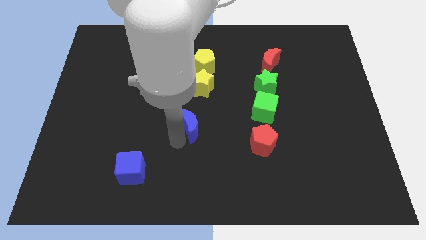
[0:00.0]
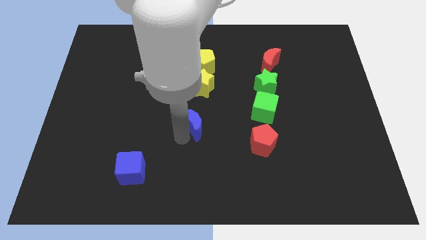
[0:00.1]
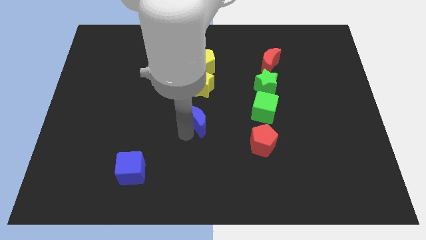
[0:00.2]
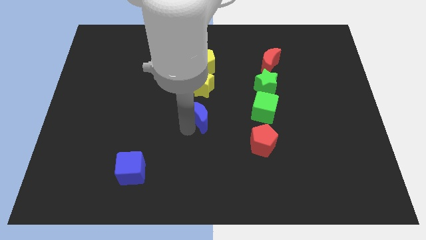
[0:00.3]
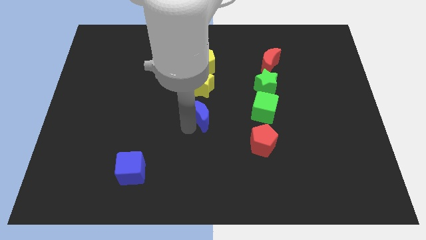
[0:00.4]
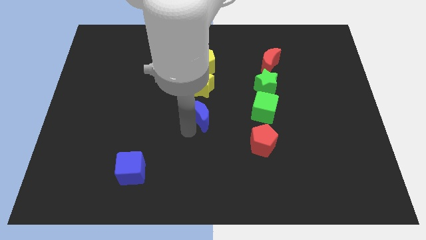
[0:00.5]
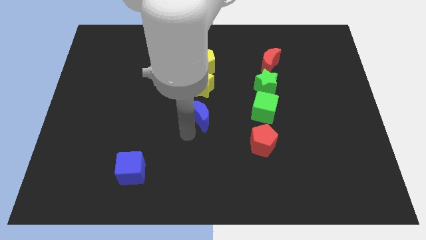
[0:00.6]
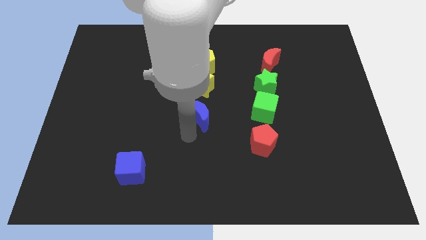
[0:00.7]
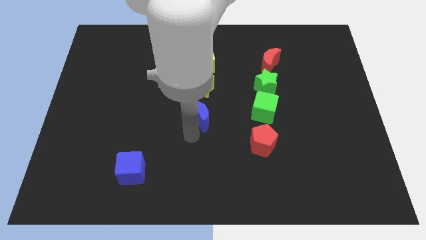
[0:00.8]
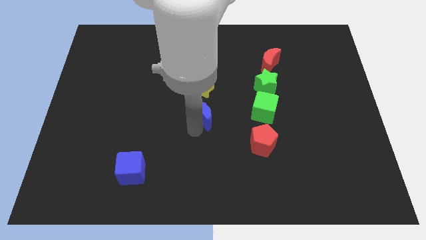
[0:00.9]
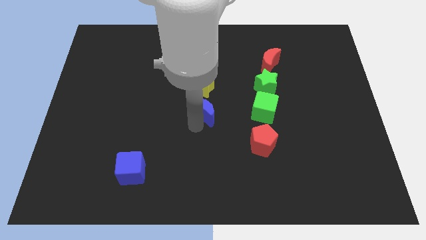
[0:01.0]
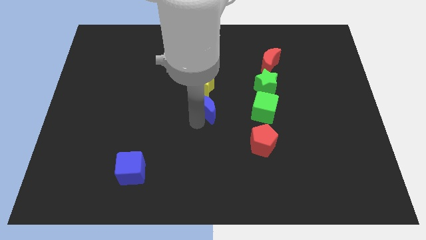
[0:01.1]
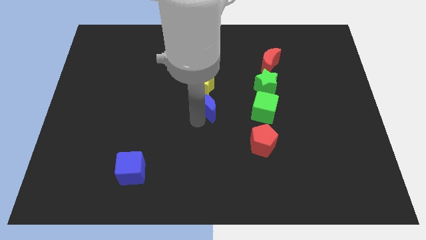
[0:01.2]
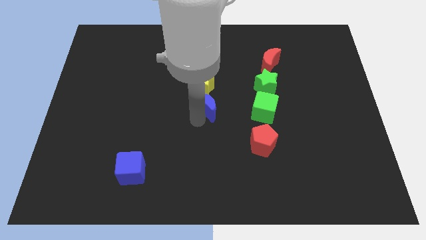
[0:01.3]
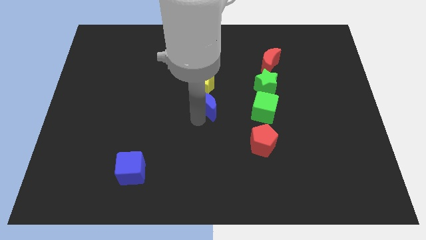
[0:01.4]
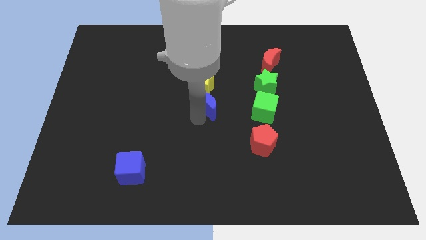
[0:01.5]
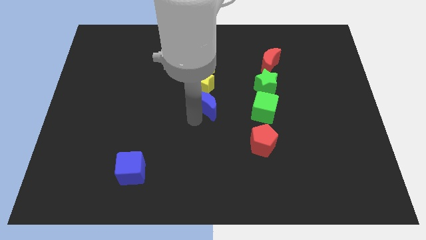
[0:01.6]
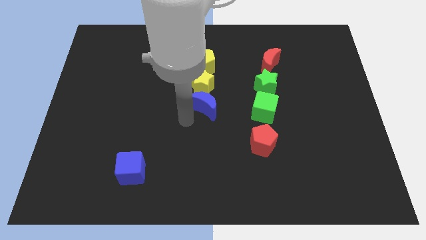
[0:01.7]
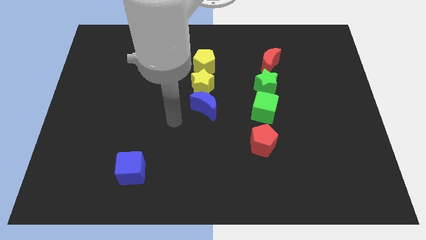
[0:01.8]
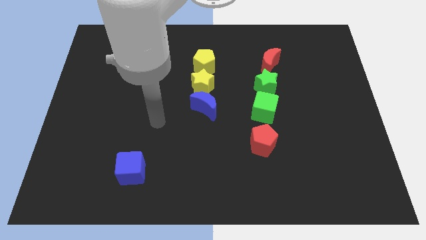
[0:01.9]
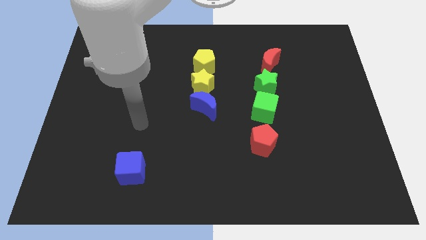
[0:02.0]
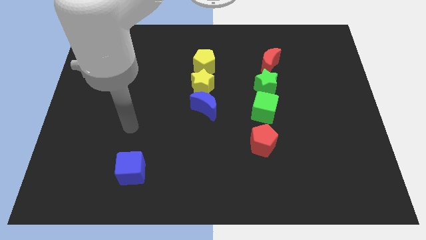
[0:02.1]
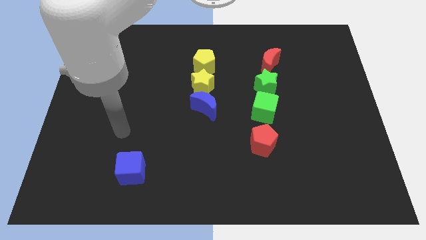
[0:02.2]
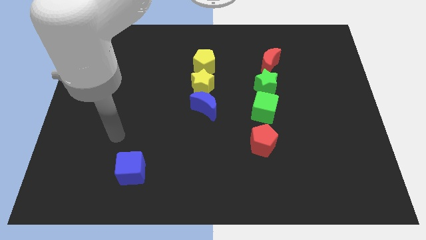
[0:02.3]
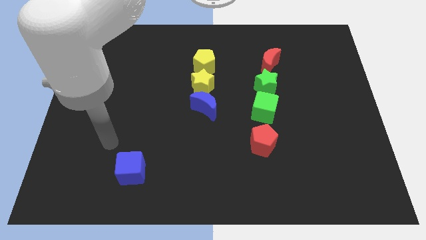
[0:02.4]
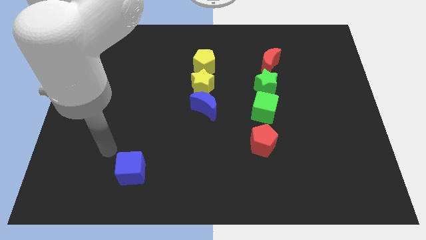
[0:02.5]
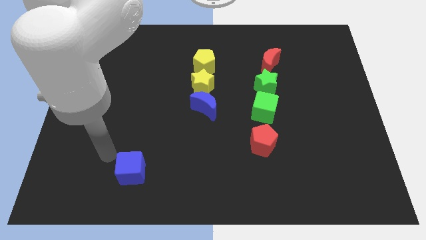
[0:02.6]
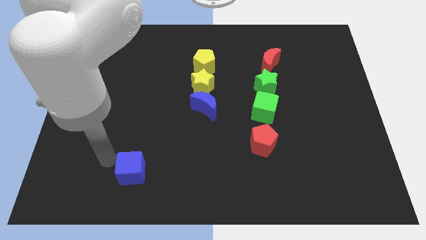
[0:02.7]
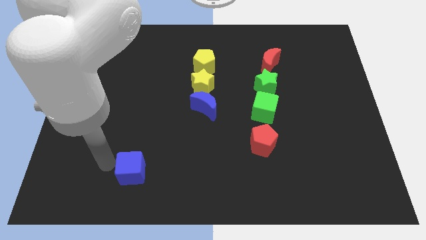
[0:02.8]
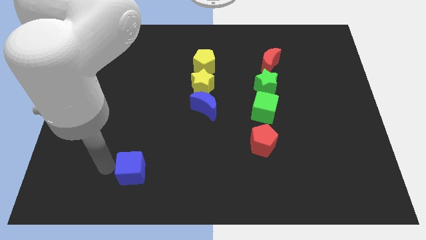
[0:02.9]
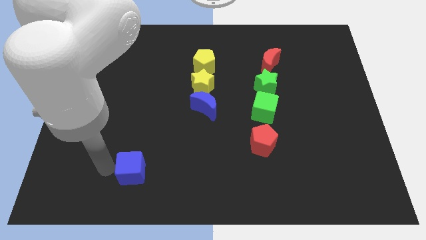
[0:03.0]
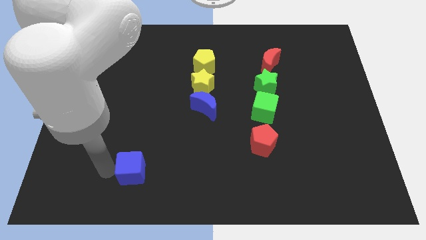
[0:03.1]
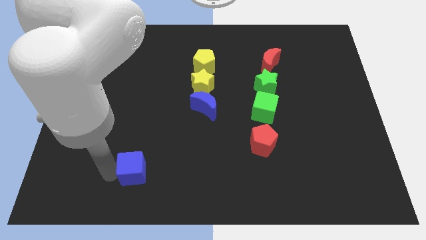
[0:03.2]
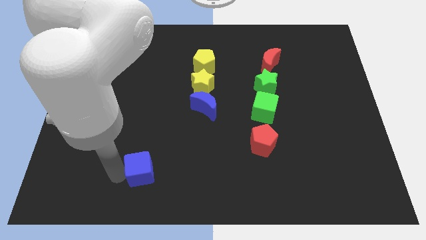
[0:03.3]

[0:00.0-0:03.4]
place the arm to the left of the blue cube

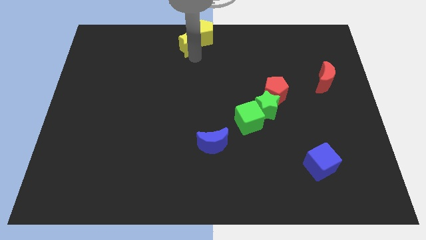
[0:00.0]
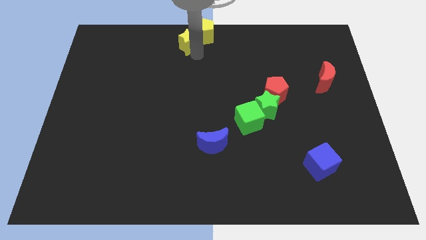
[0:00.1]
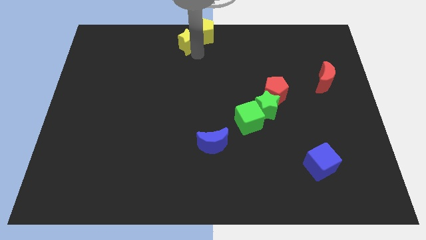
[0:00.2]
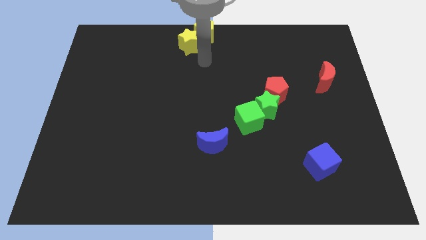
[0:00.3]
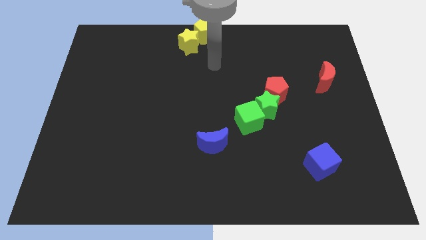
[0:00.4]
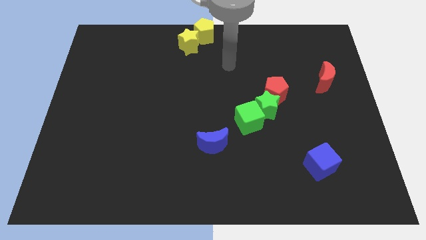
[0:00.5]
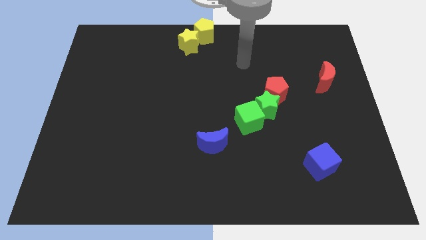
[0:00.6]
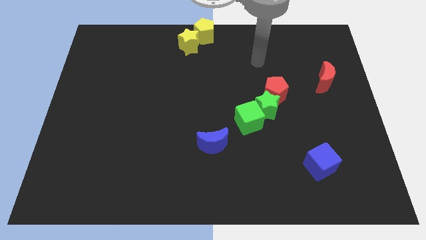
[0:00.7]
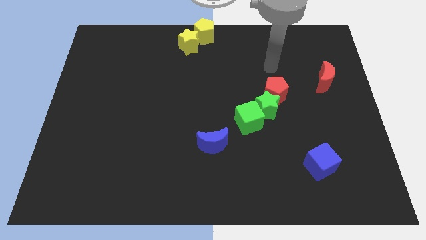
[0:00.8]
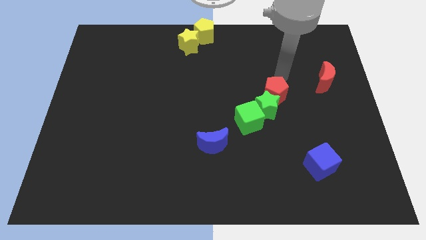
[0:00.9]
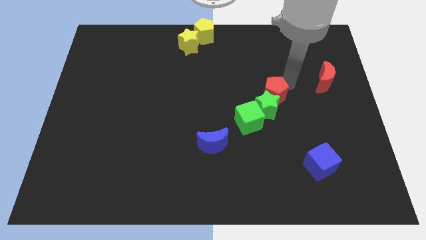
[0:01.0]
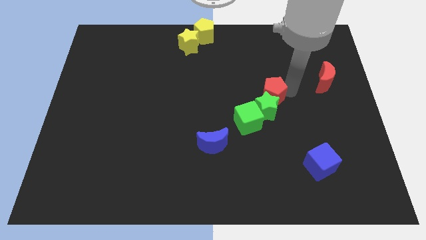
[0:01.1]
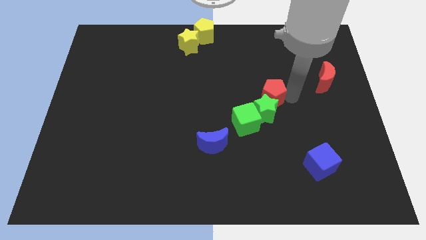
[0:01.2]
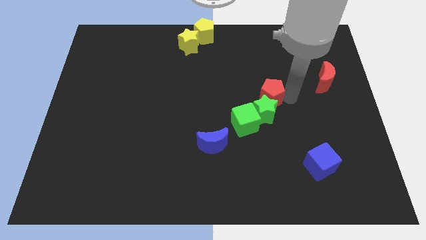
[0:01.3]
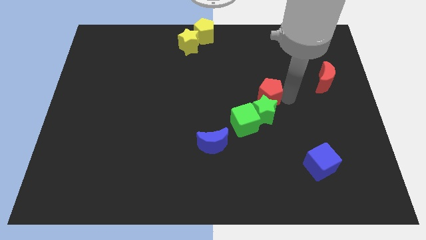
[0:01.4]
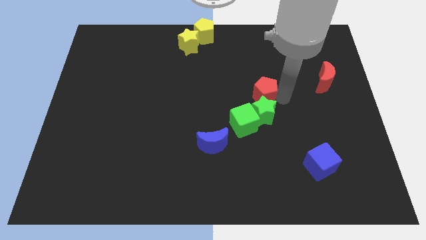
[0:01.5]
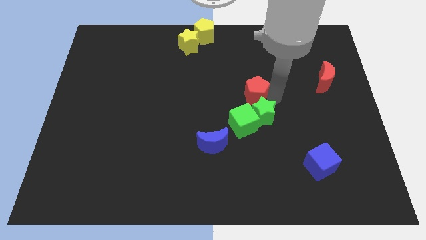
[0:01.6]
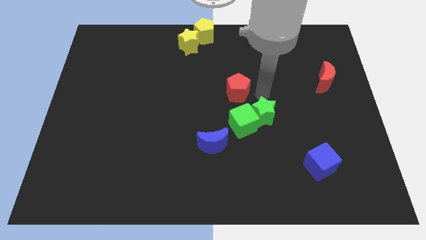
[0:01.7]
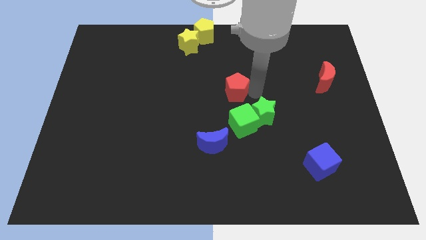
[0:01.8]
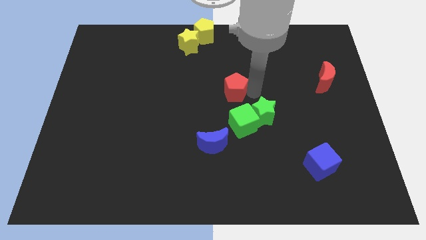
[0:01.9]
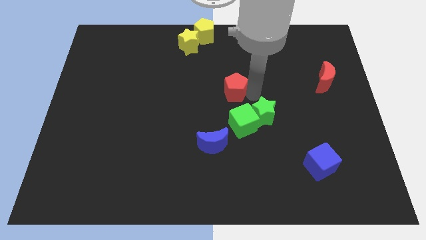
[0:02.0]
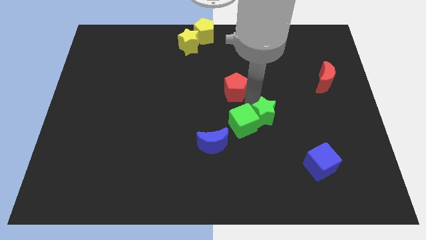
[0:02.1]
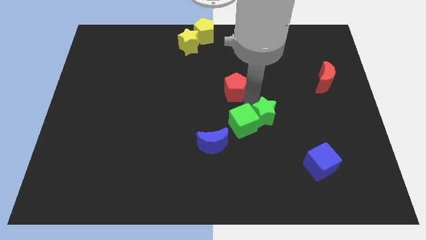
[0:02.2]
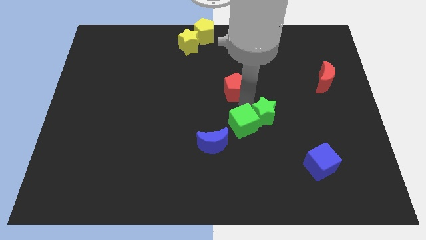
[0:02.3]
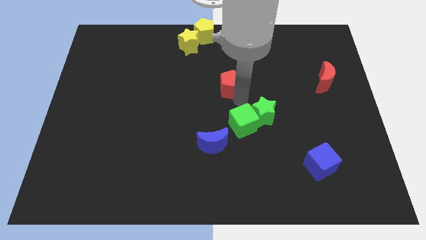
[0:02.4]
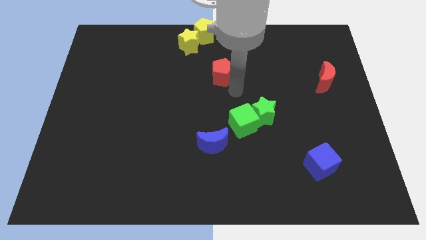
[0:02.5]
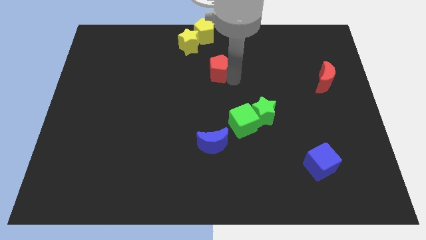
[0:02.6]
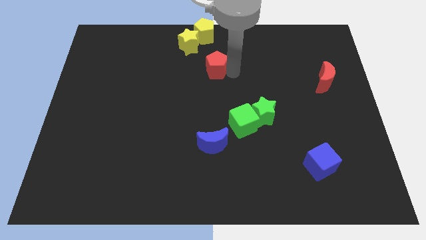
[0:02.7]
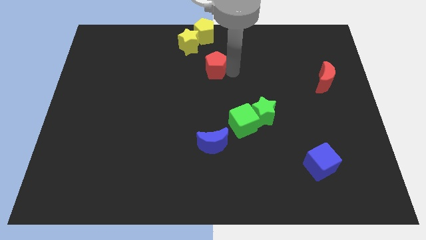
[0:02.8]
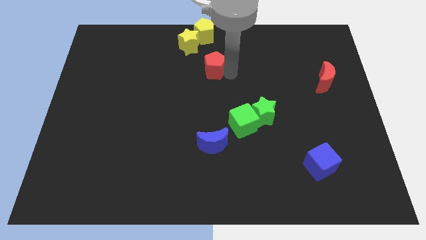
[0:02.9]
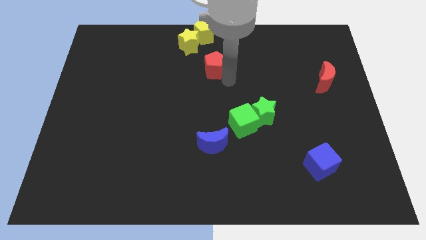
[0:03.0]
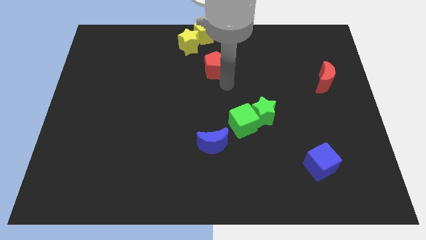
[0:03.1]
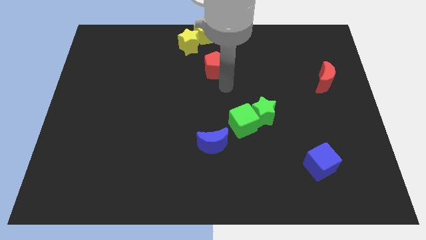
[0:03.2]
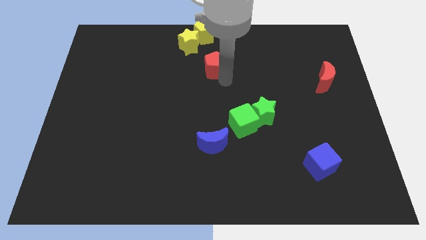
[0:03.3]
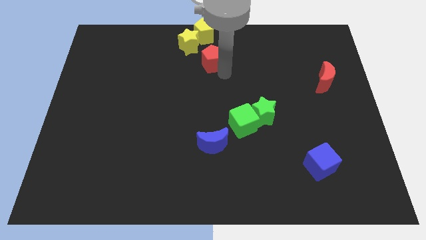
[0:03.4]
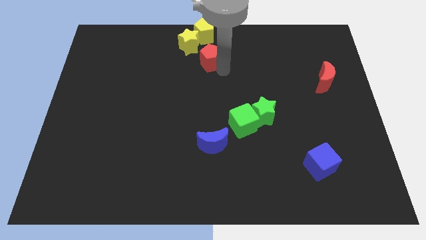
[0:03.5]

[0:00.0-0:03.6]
move red pentagon vertically below yellow pentagon

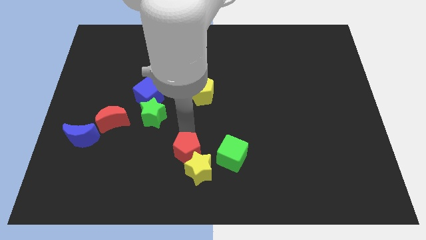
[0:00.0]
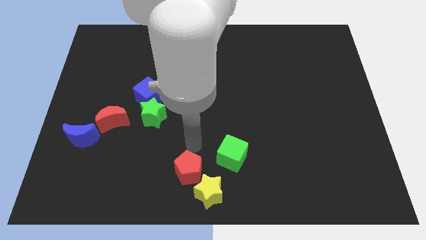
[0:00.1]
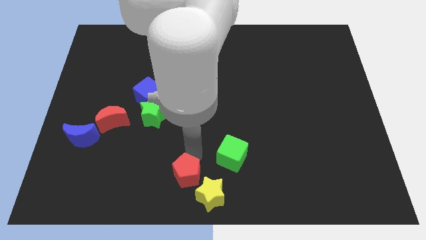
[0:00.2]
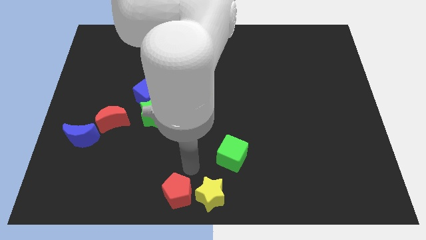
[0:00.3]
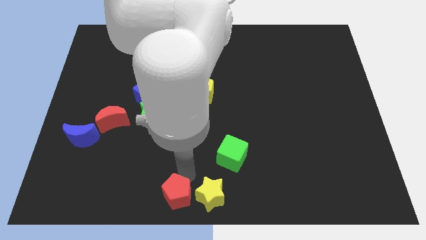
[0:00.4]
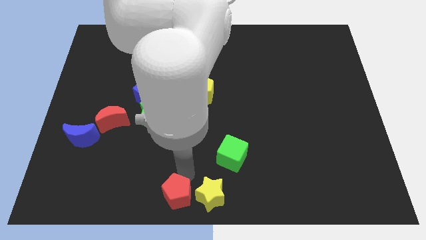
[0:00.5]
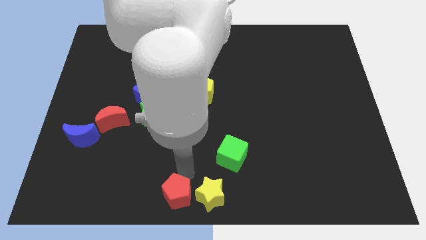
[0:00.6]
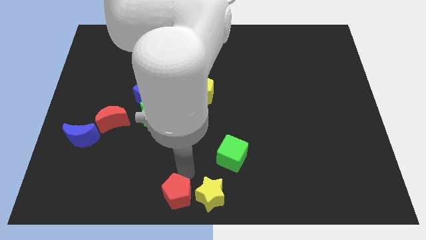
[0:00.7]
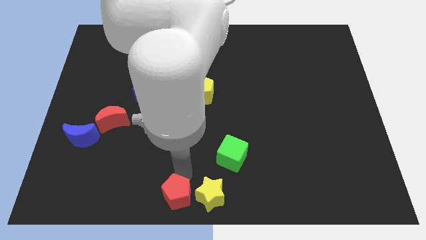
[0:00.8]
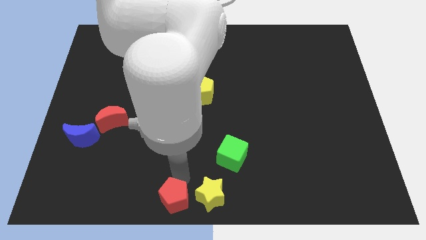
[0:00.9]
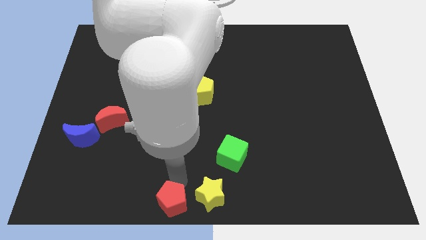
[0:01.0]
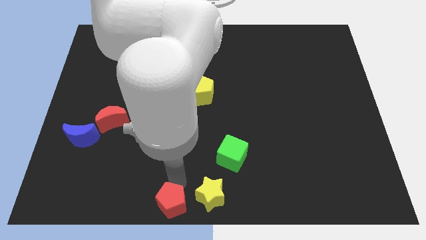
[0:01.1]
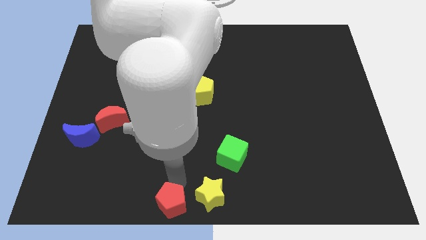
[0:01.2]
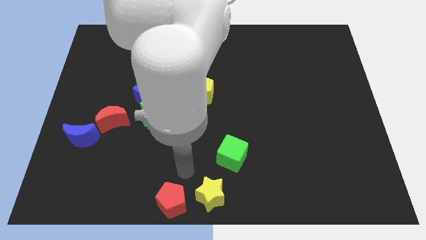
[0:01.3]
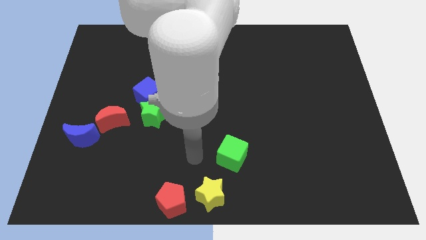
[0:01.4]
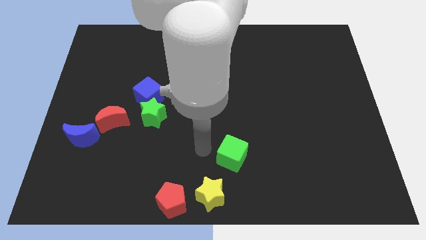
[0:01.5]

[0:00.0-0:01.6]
push the red pentagon with yellow star towards bottom center of the board

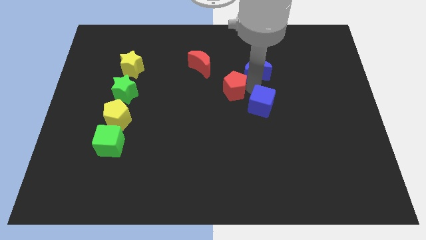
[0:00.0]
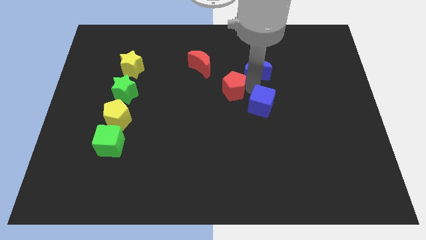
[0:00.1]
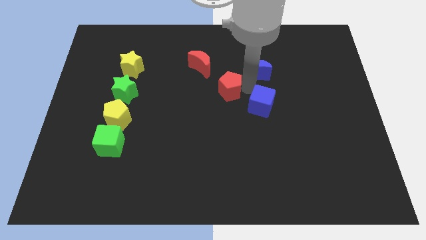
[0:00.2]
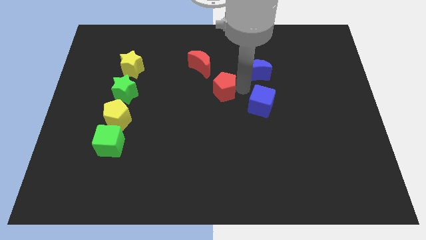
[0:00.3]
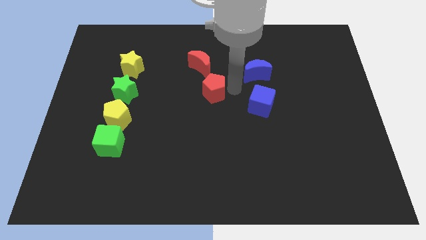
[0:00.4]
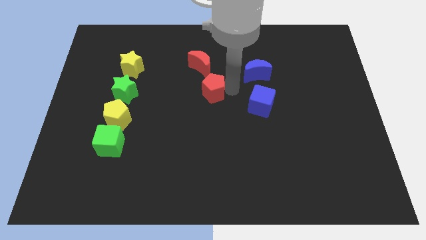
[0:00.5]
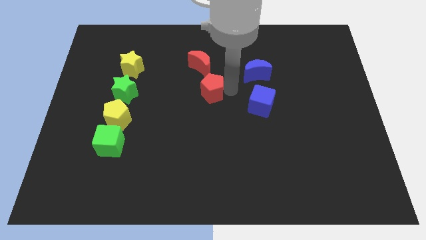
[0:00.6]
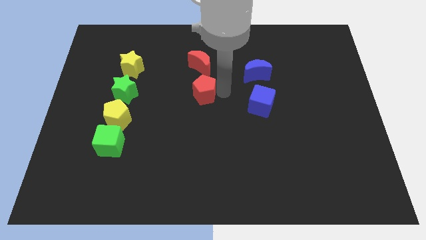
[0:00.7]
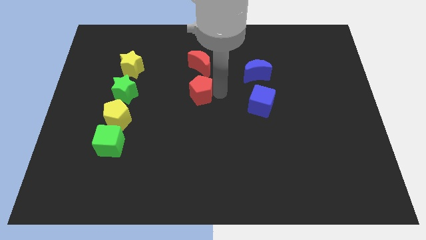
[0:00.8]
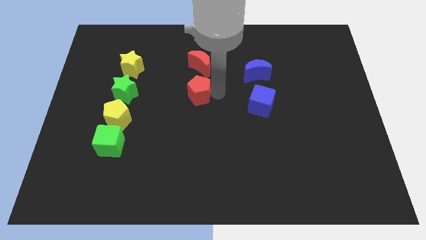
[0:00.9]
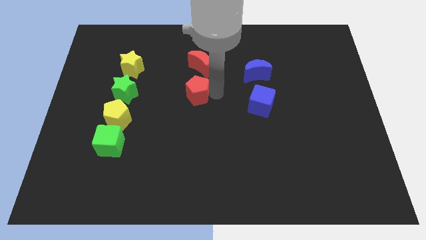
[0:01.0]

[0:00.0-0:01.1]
place the red pentagon below the red crescent
